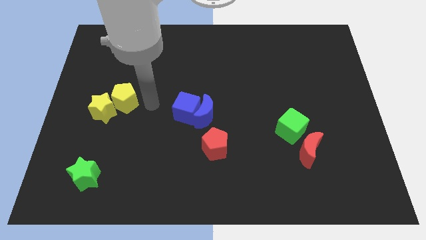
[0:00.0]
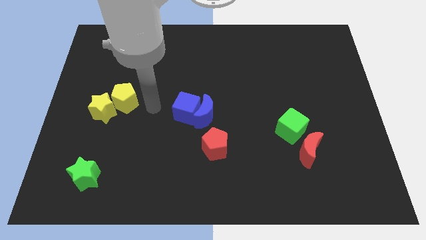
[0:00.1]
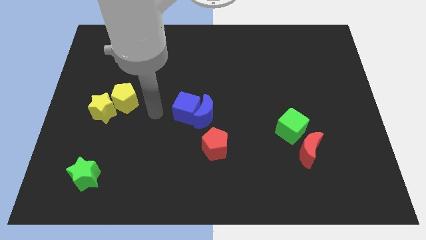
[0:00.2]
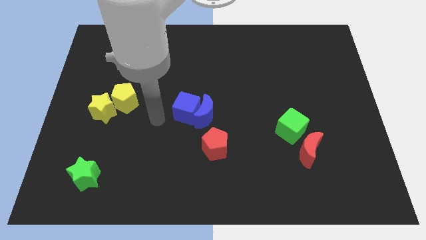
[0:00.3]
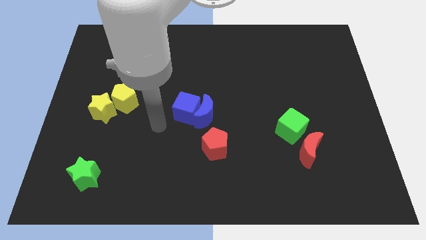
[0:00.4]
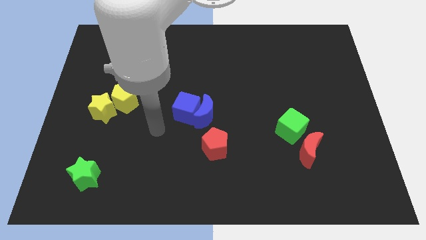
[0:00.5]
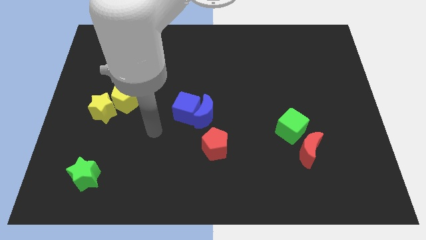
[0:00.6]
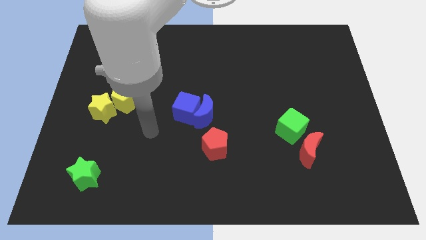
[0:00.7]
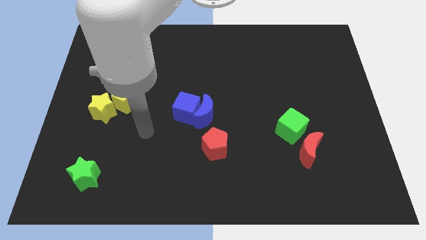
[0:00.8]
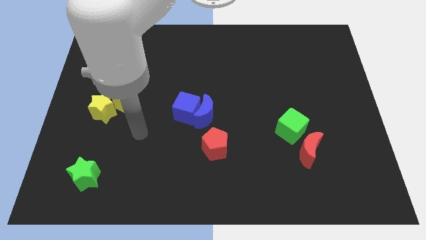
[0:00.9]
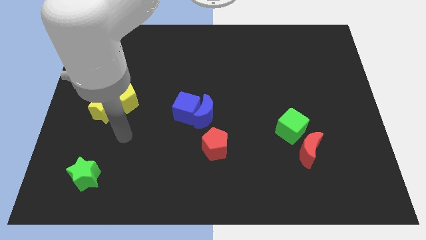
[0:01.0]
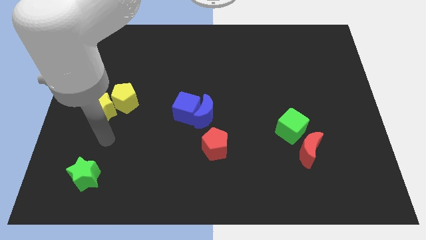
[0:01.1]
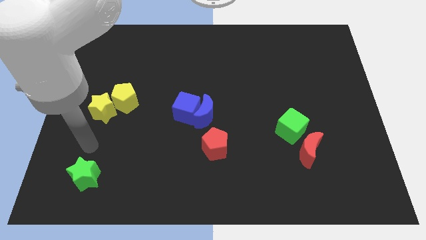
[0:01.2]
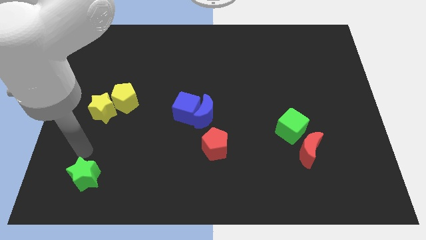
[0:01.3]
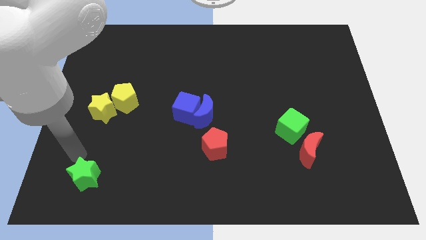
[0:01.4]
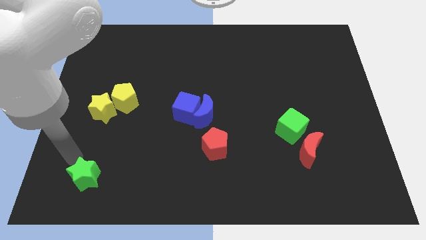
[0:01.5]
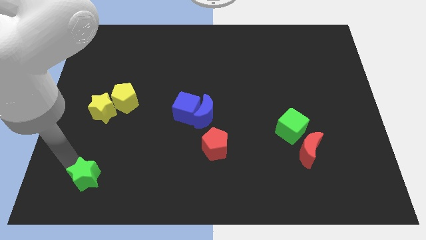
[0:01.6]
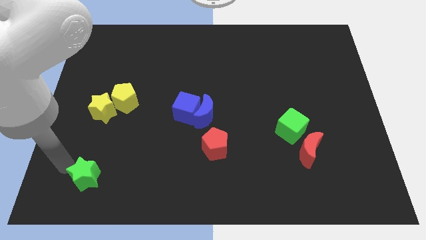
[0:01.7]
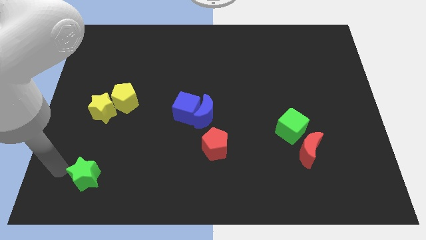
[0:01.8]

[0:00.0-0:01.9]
point your arm at the left side of the green star

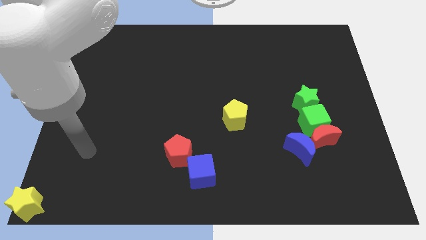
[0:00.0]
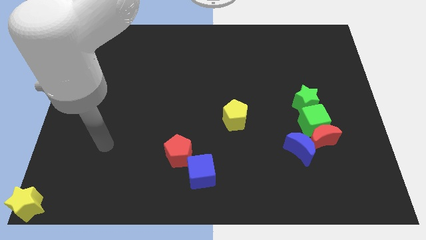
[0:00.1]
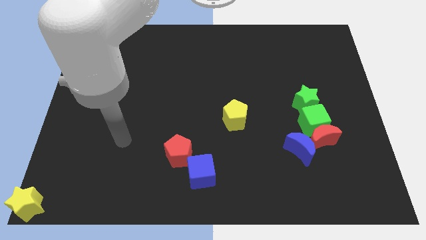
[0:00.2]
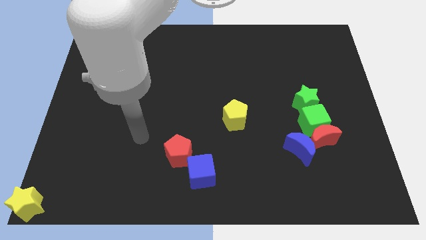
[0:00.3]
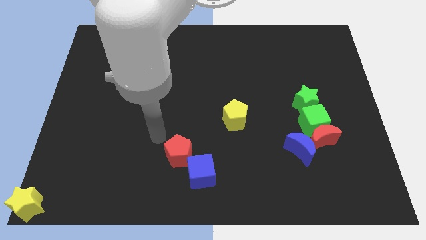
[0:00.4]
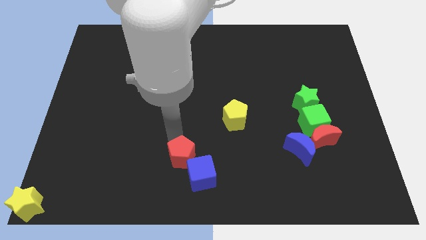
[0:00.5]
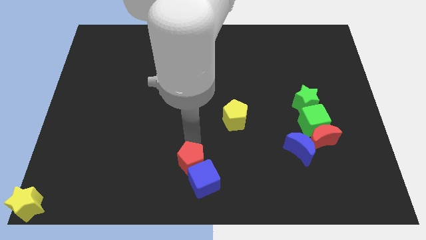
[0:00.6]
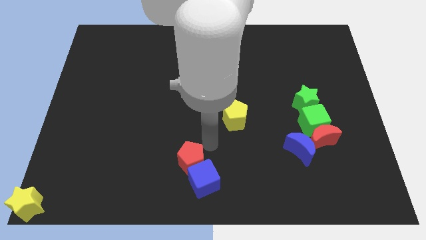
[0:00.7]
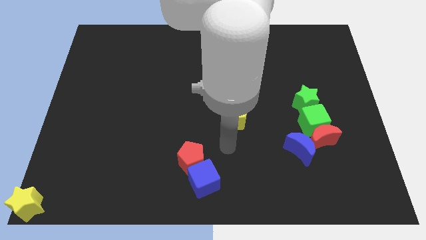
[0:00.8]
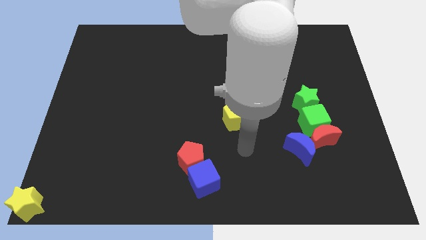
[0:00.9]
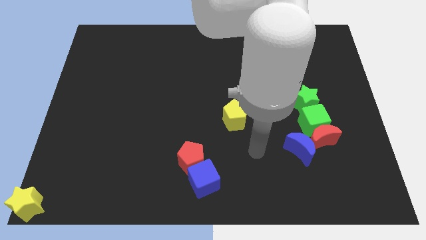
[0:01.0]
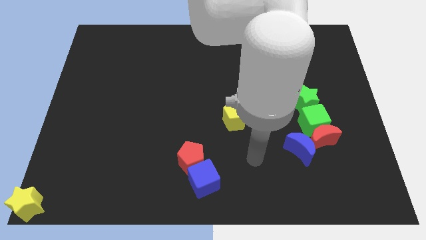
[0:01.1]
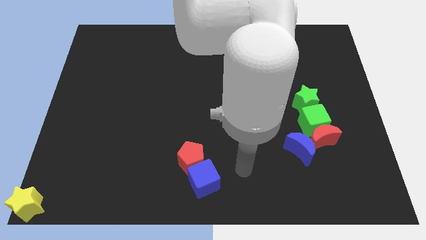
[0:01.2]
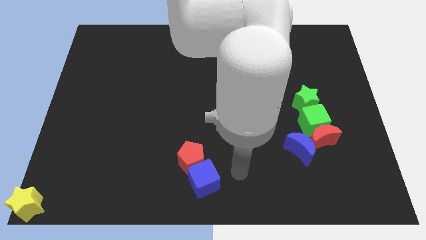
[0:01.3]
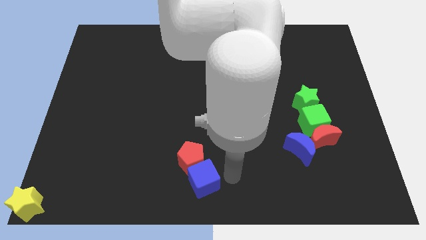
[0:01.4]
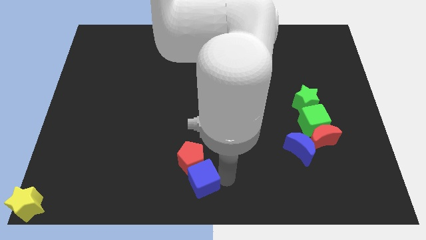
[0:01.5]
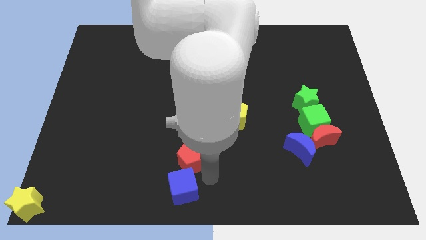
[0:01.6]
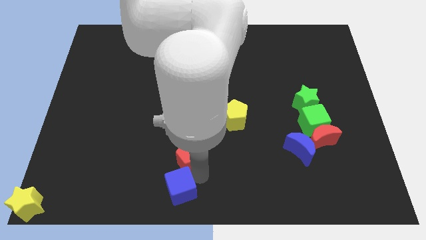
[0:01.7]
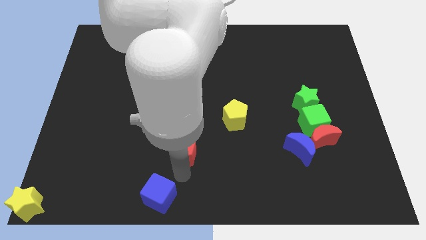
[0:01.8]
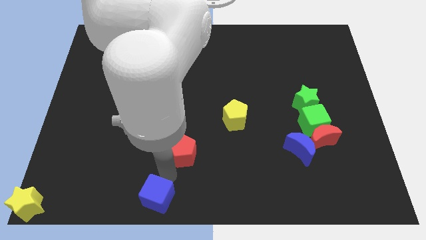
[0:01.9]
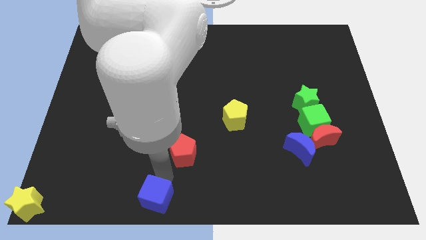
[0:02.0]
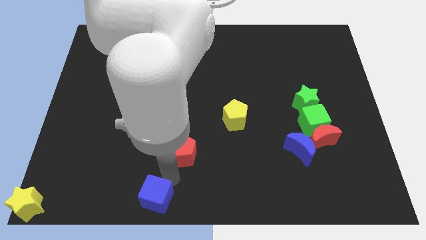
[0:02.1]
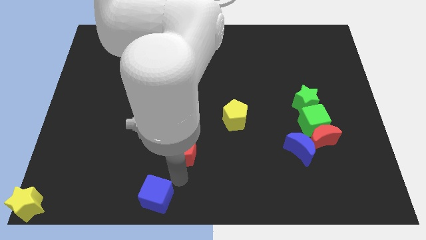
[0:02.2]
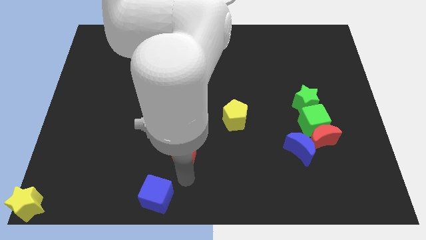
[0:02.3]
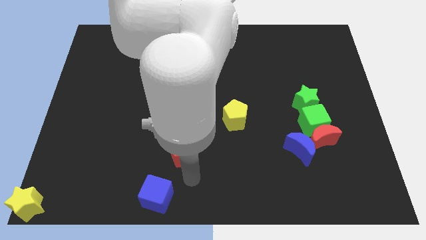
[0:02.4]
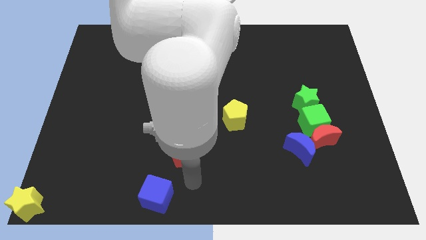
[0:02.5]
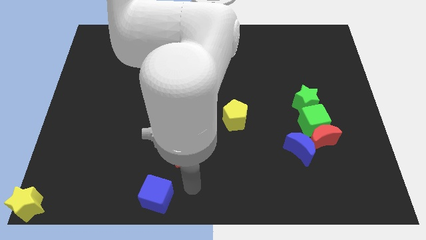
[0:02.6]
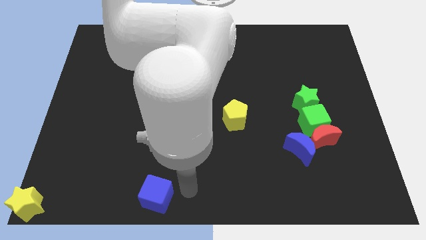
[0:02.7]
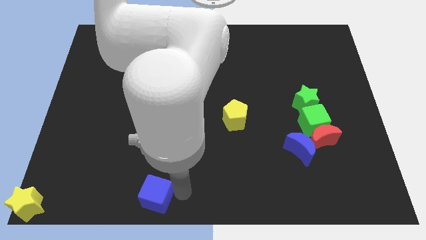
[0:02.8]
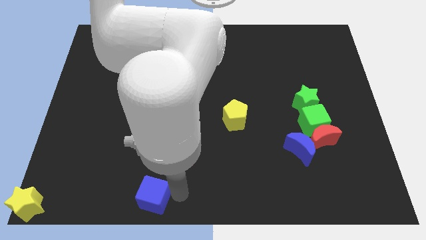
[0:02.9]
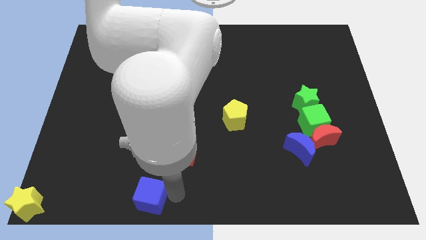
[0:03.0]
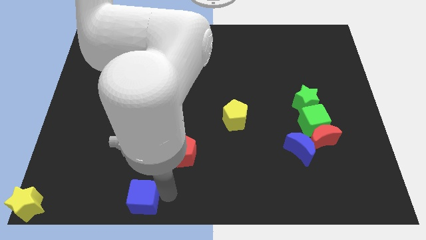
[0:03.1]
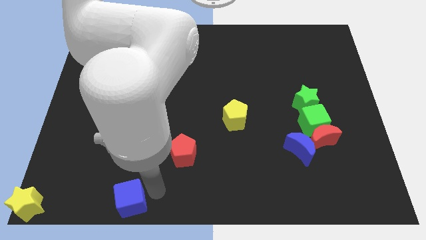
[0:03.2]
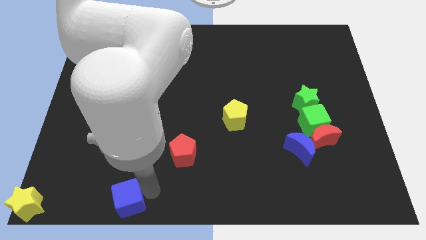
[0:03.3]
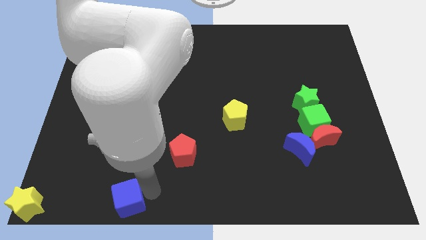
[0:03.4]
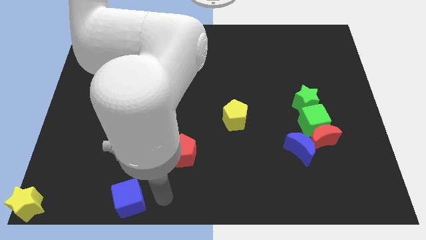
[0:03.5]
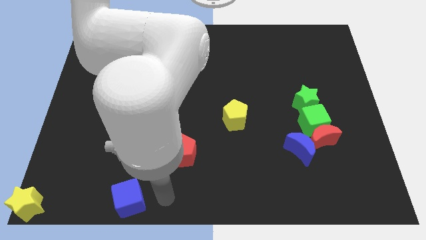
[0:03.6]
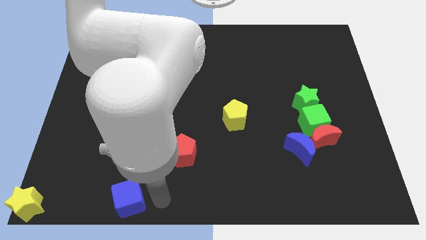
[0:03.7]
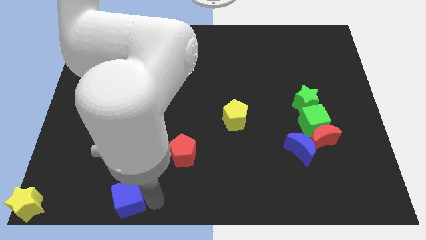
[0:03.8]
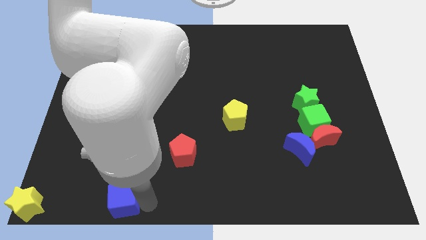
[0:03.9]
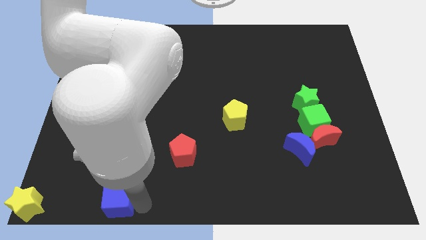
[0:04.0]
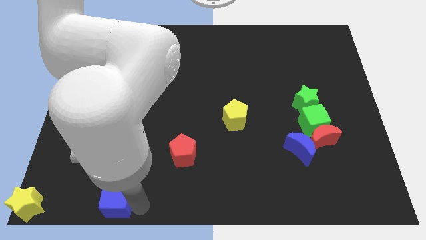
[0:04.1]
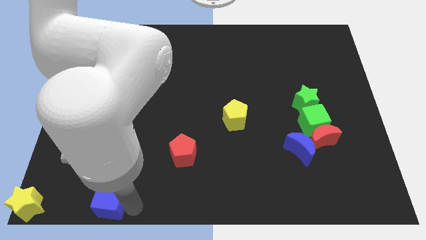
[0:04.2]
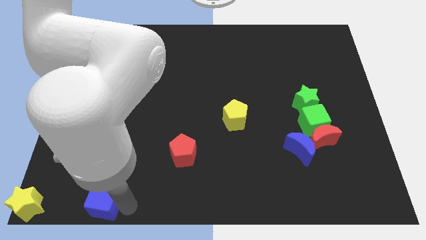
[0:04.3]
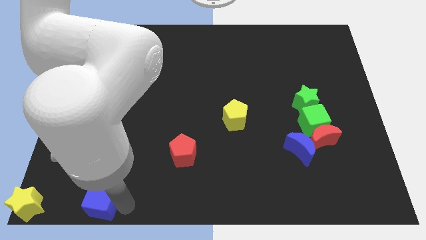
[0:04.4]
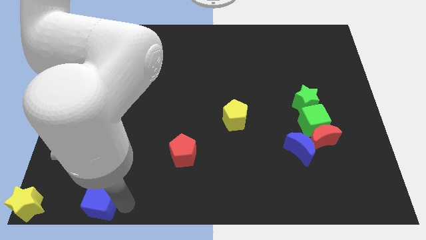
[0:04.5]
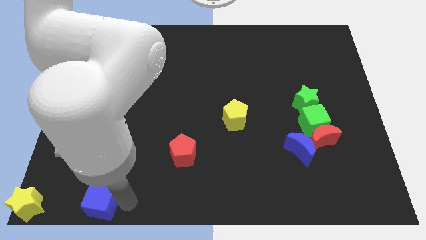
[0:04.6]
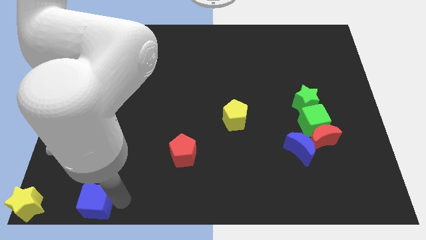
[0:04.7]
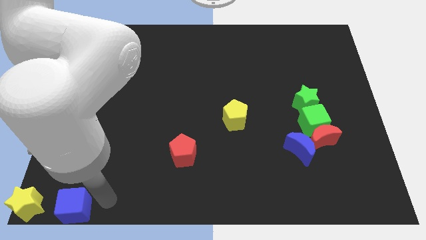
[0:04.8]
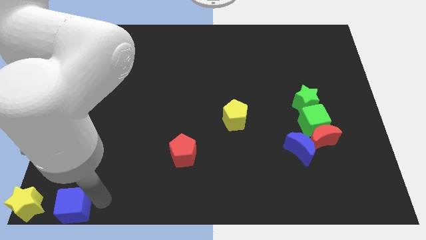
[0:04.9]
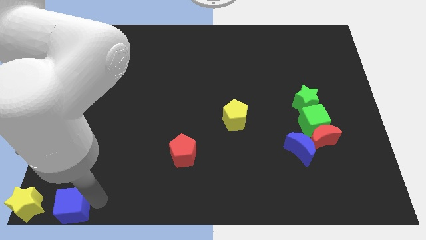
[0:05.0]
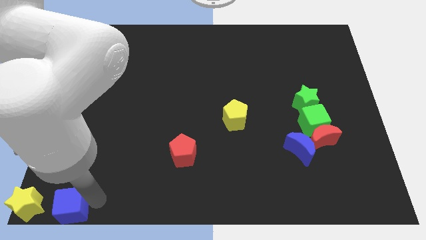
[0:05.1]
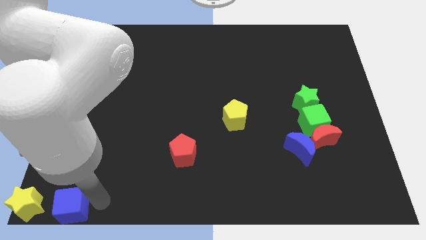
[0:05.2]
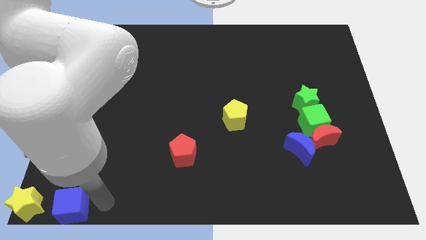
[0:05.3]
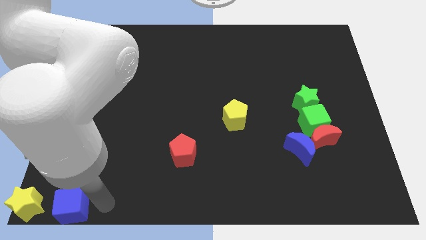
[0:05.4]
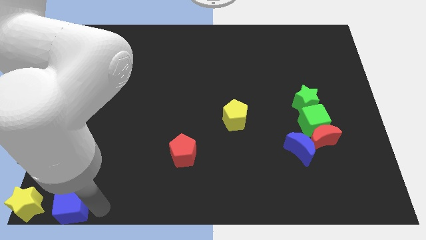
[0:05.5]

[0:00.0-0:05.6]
push the blue cube to the right of the yellow star

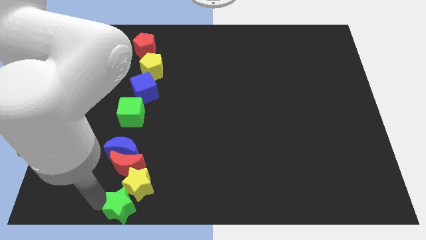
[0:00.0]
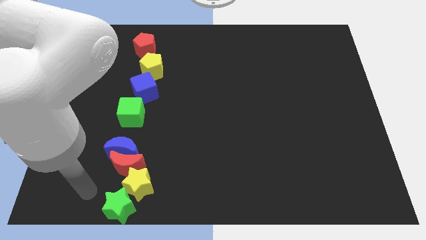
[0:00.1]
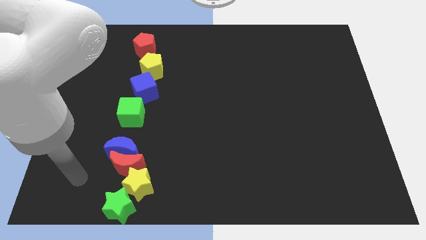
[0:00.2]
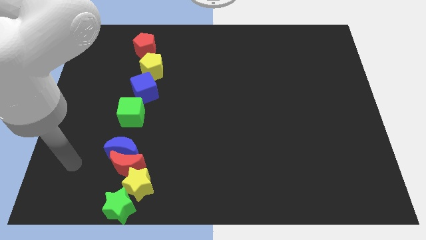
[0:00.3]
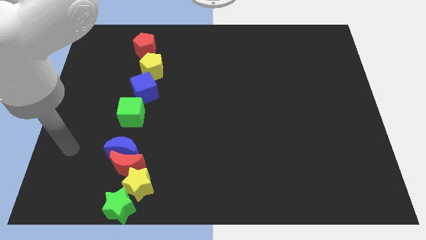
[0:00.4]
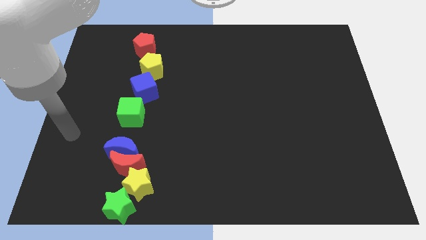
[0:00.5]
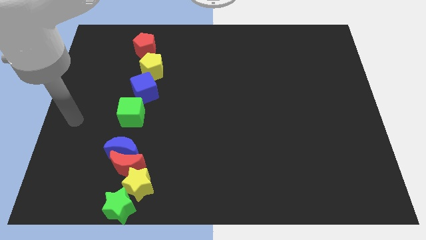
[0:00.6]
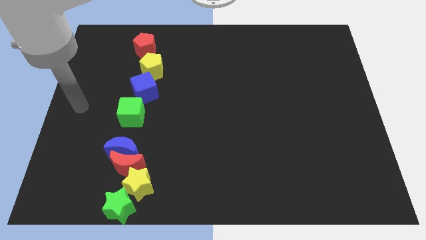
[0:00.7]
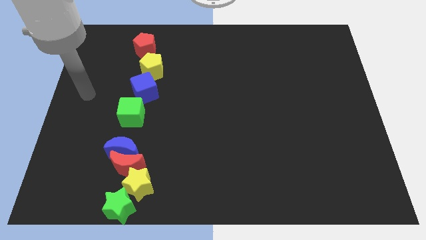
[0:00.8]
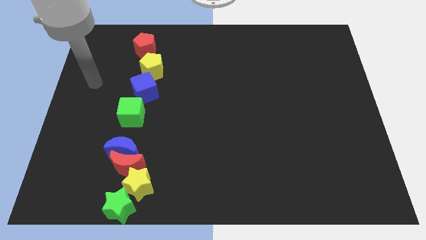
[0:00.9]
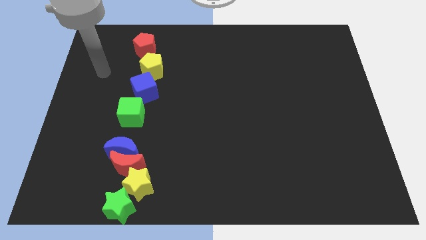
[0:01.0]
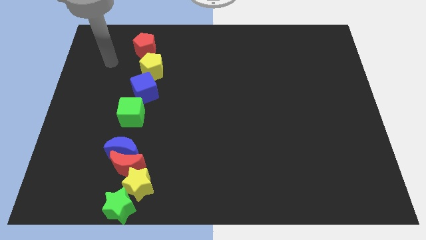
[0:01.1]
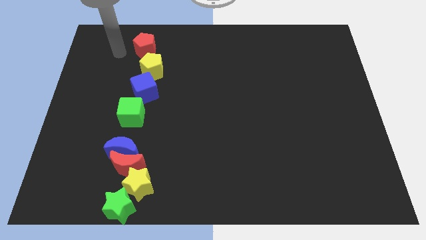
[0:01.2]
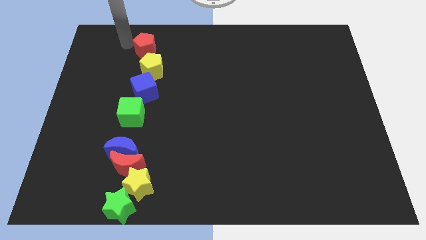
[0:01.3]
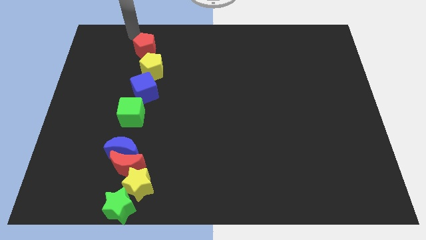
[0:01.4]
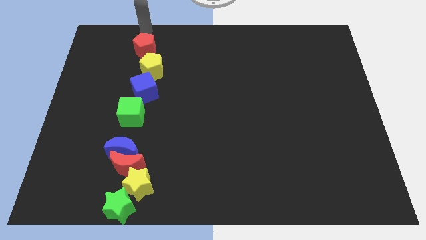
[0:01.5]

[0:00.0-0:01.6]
point your arm at the top left side of red pentagon
